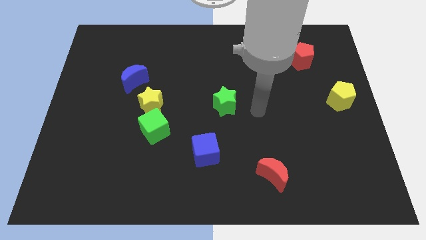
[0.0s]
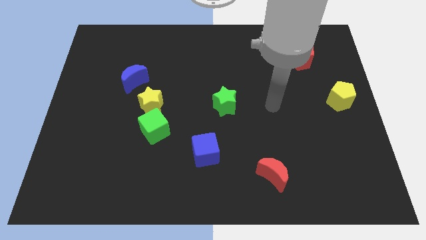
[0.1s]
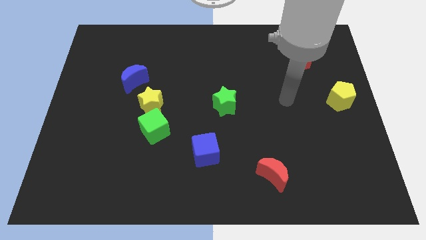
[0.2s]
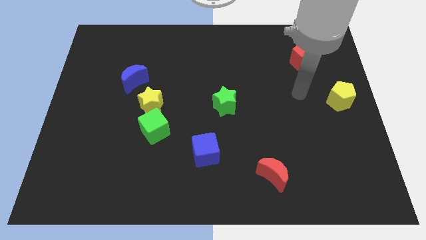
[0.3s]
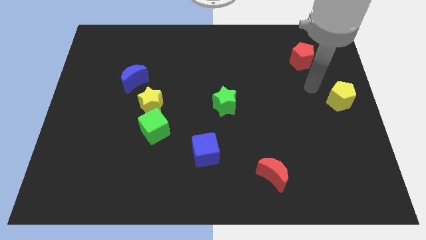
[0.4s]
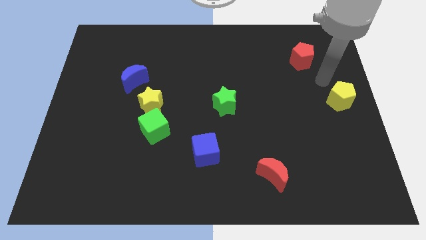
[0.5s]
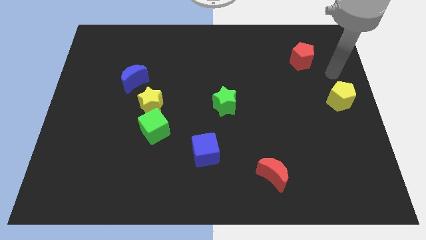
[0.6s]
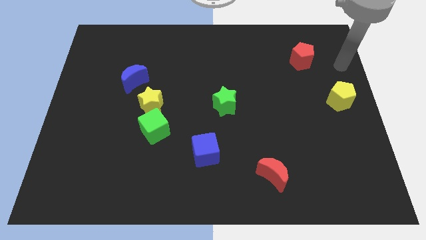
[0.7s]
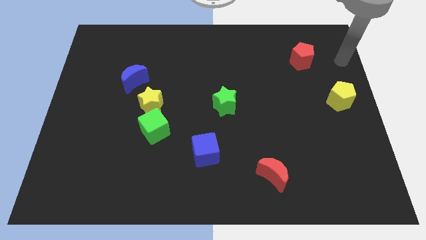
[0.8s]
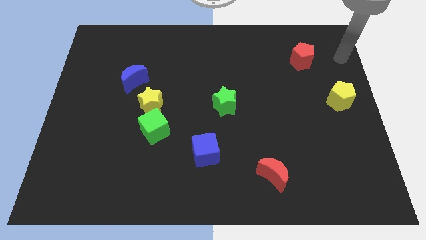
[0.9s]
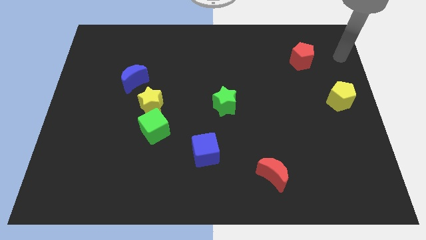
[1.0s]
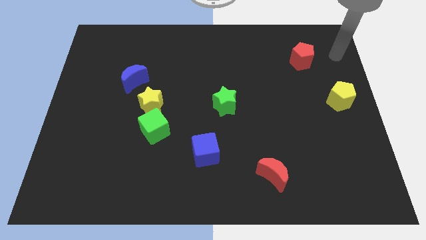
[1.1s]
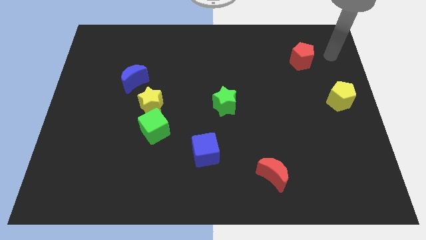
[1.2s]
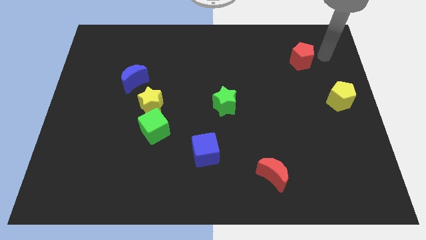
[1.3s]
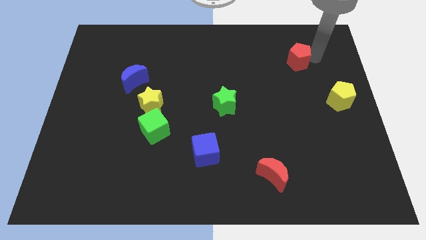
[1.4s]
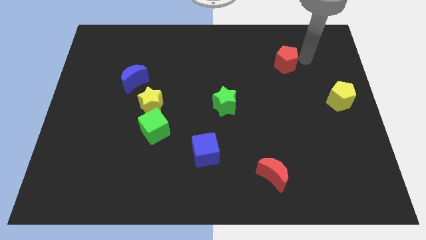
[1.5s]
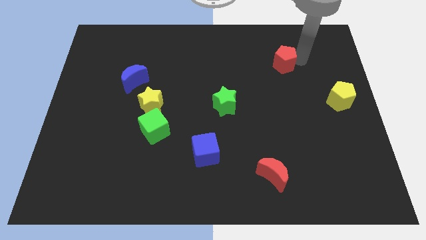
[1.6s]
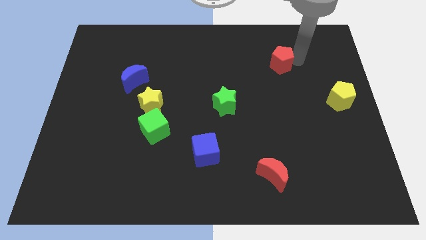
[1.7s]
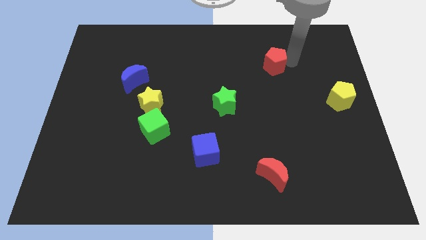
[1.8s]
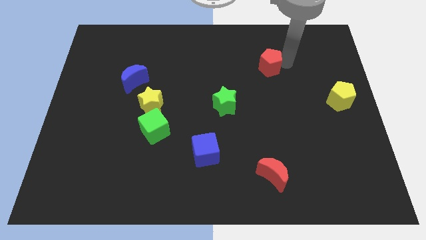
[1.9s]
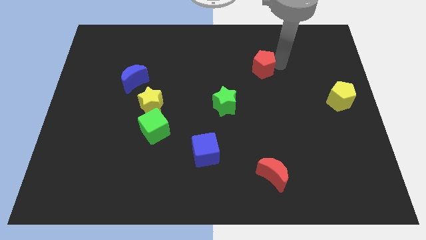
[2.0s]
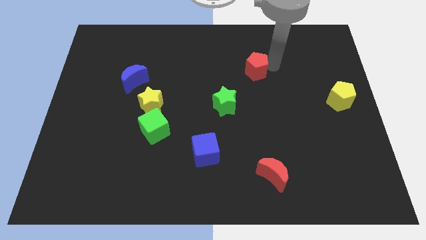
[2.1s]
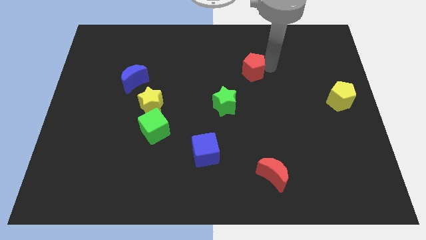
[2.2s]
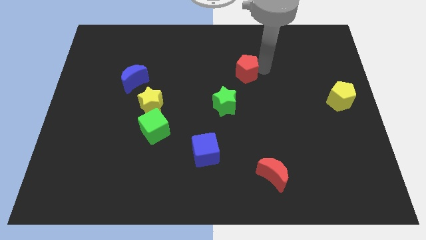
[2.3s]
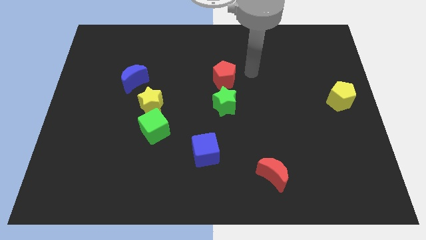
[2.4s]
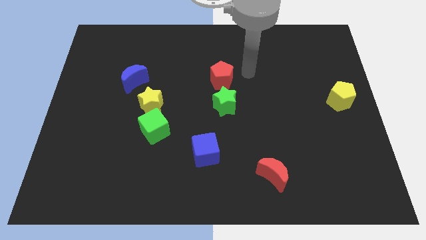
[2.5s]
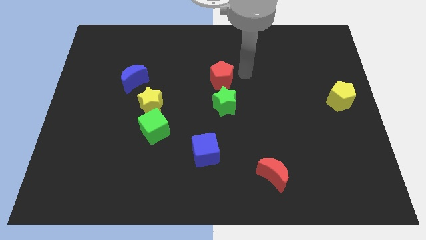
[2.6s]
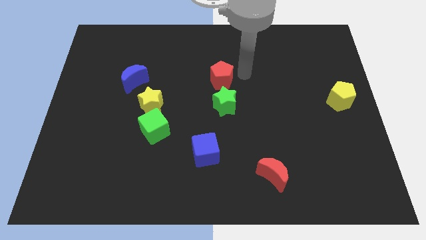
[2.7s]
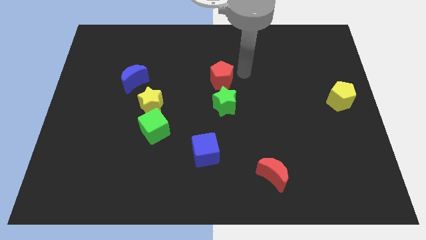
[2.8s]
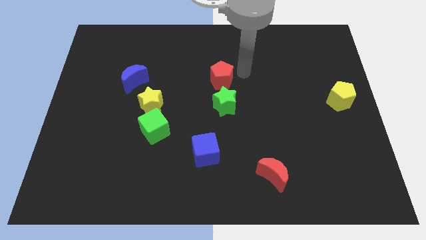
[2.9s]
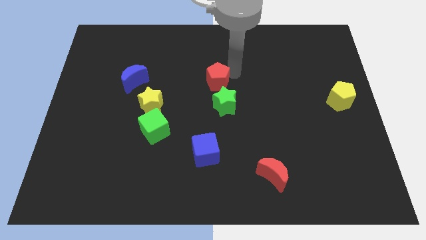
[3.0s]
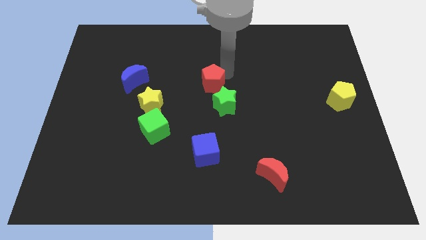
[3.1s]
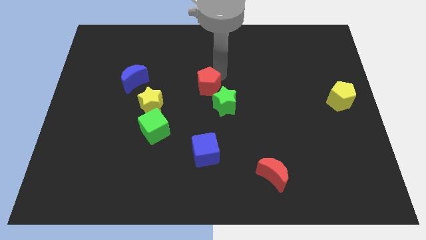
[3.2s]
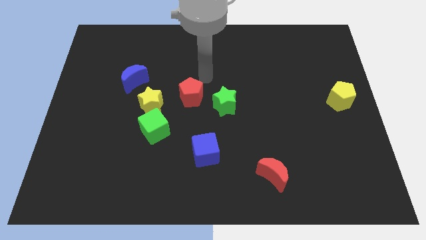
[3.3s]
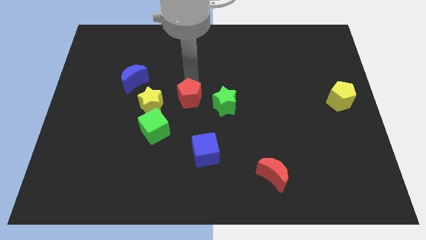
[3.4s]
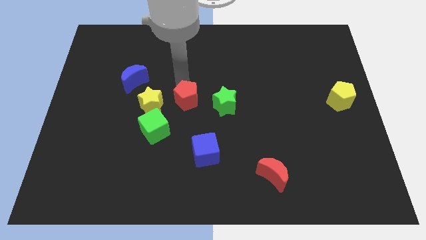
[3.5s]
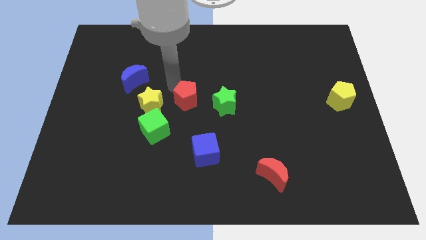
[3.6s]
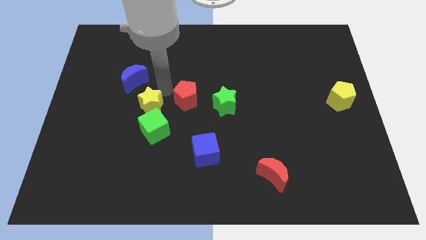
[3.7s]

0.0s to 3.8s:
push the red pentagon slightly towards the yellow star

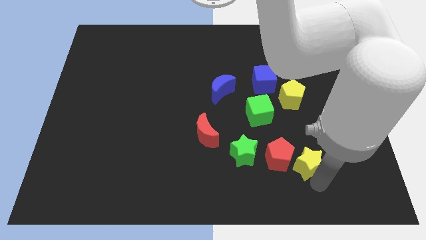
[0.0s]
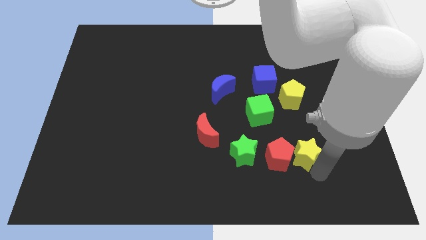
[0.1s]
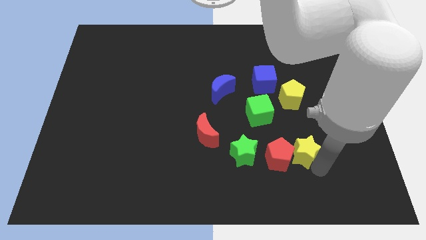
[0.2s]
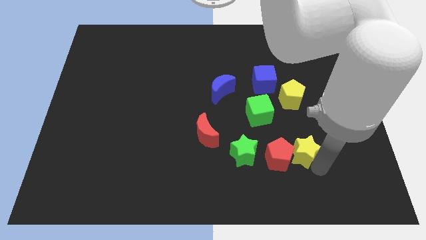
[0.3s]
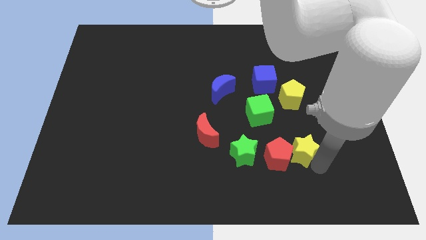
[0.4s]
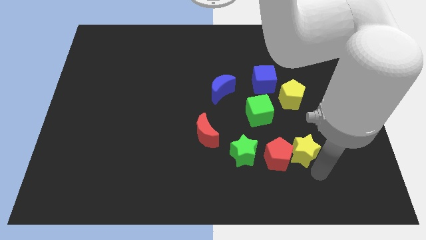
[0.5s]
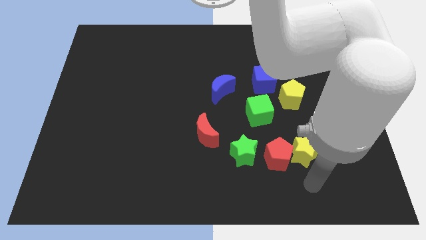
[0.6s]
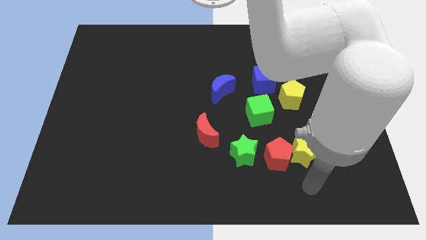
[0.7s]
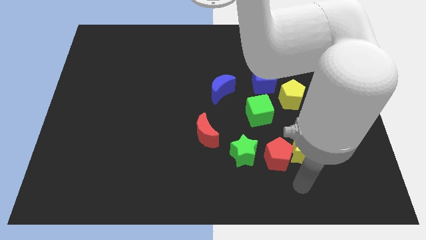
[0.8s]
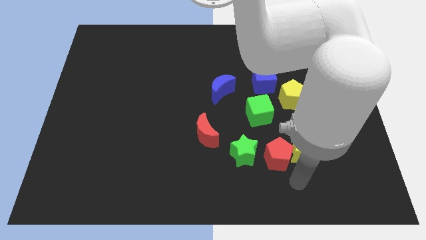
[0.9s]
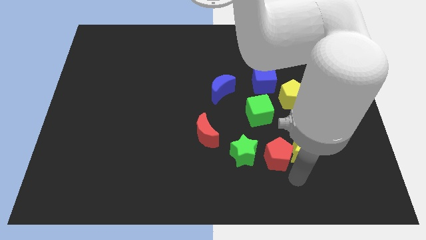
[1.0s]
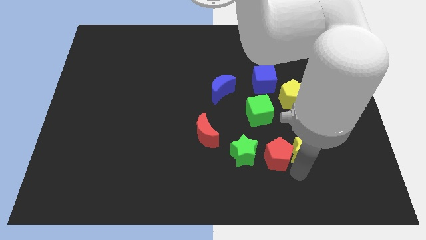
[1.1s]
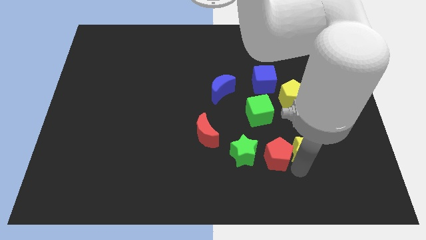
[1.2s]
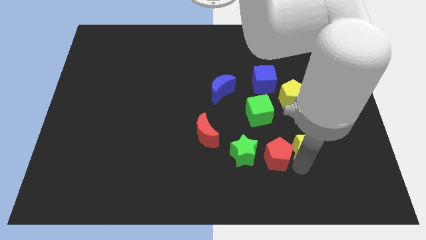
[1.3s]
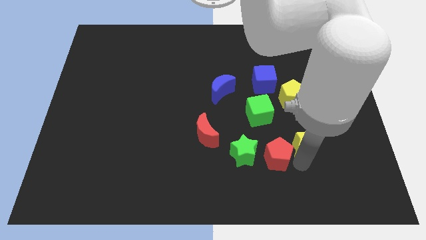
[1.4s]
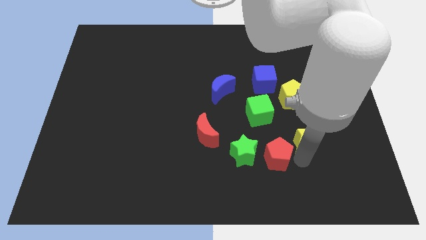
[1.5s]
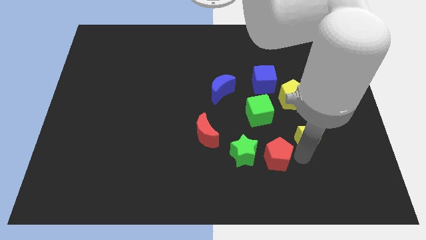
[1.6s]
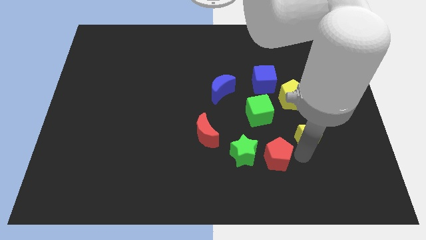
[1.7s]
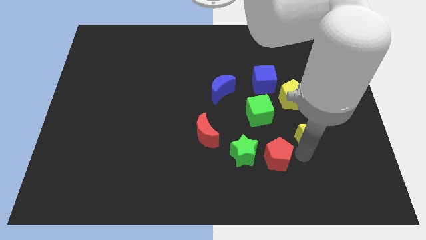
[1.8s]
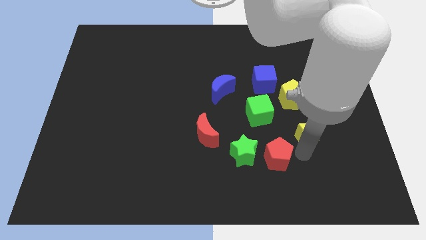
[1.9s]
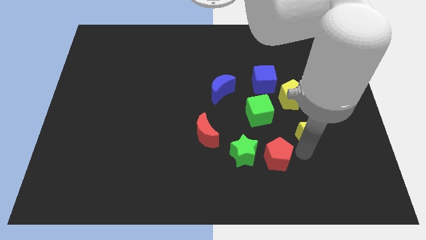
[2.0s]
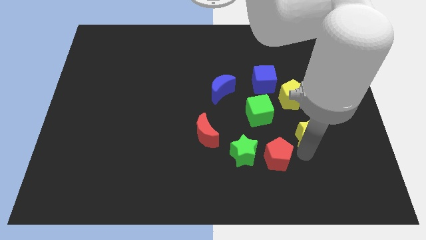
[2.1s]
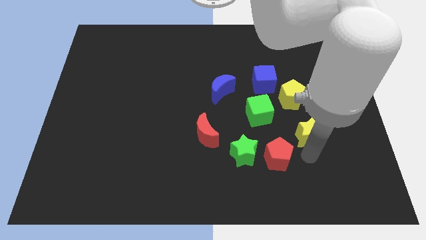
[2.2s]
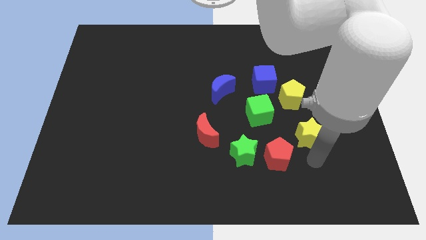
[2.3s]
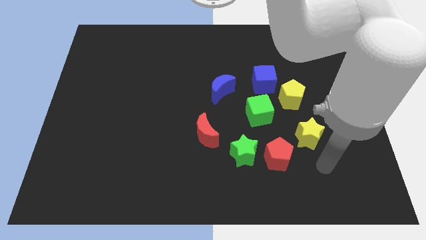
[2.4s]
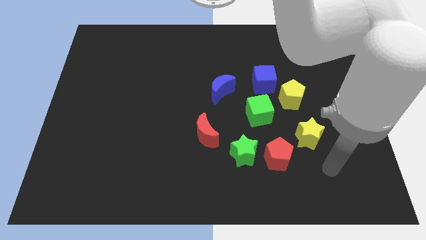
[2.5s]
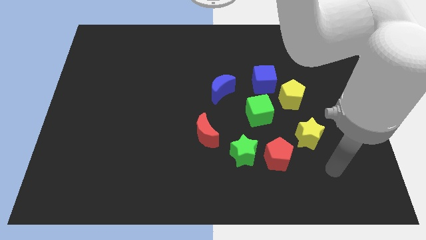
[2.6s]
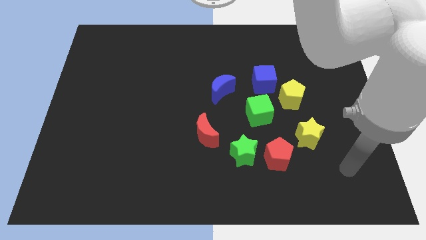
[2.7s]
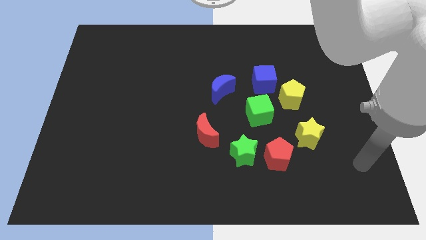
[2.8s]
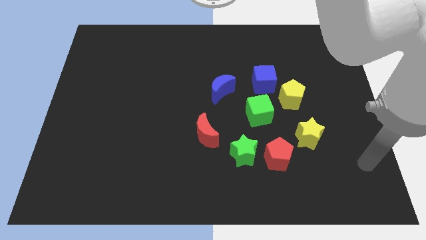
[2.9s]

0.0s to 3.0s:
separate yellow star and the red pentagon

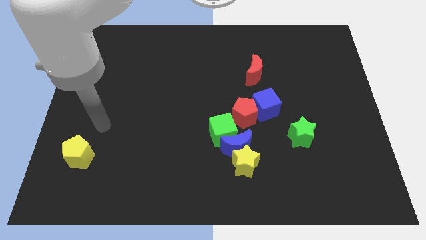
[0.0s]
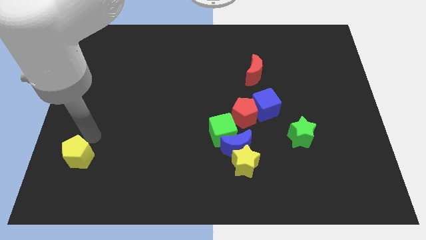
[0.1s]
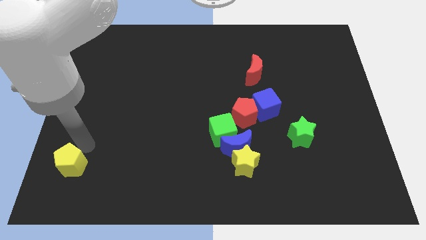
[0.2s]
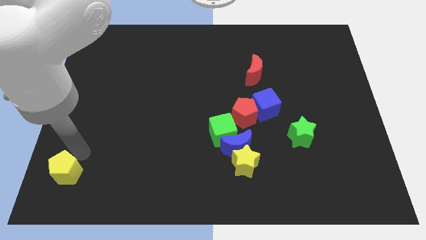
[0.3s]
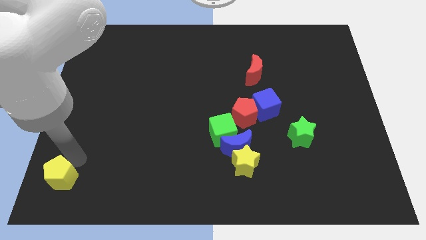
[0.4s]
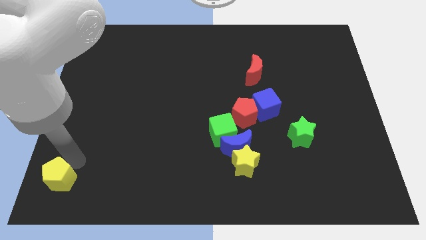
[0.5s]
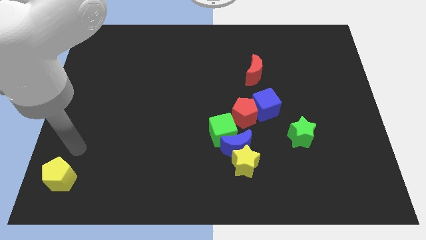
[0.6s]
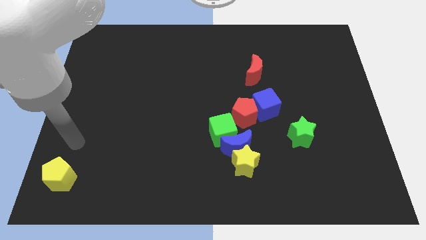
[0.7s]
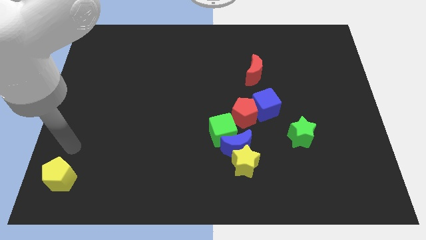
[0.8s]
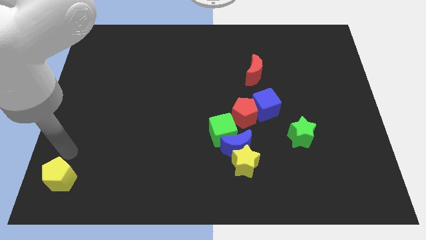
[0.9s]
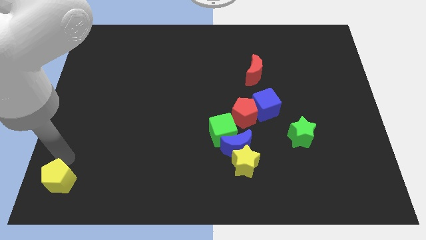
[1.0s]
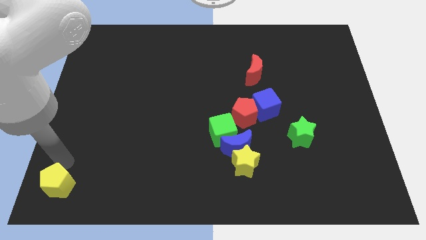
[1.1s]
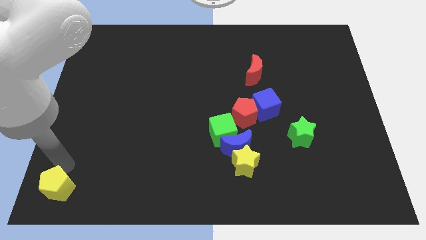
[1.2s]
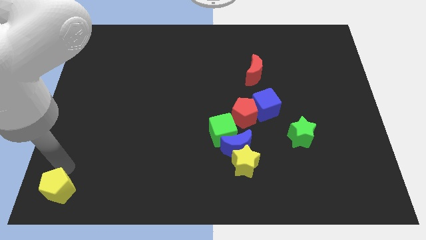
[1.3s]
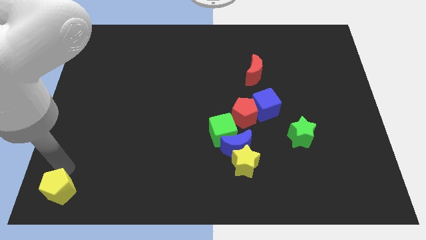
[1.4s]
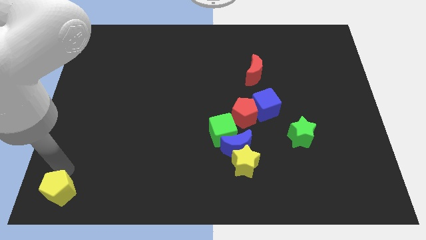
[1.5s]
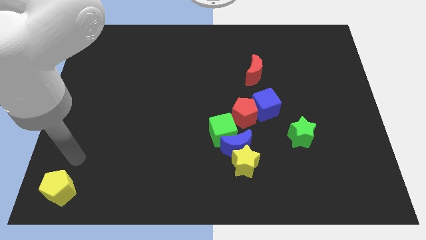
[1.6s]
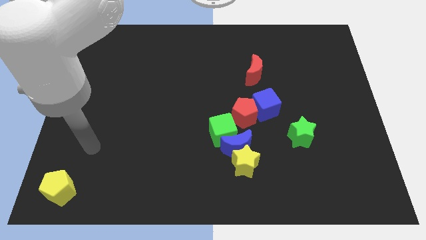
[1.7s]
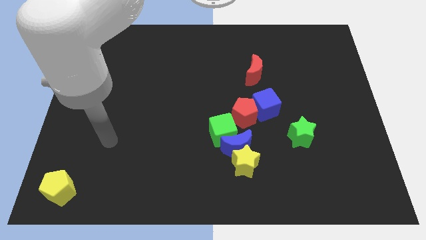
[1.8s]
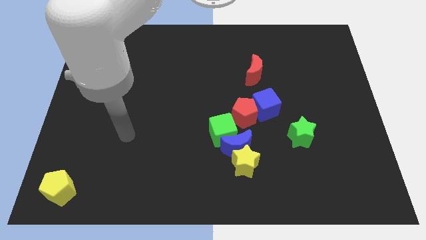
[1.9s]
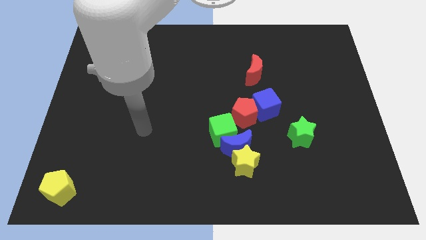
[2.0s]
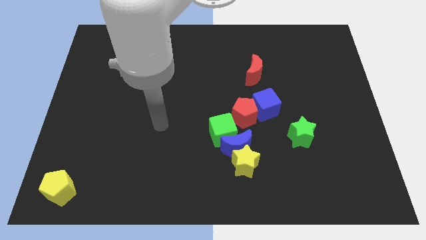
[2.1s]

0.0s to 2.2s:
place the yellow pentagon to the left corner of the board
